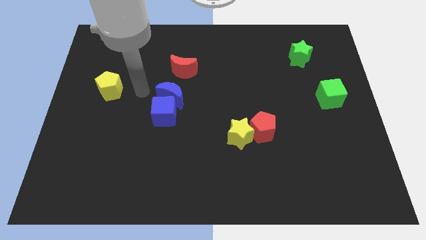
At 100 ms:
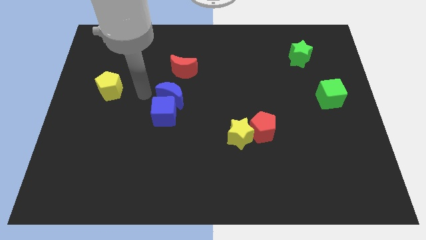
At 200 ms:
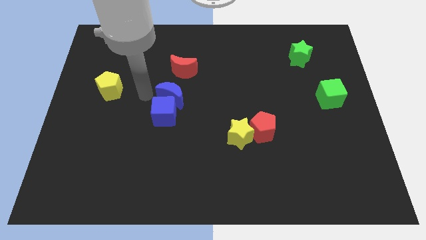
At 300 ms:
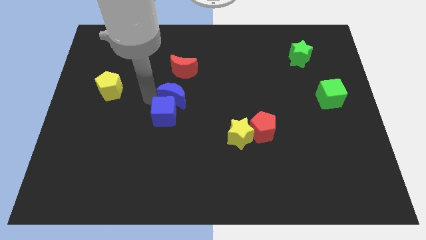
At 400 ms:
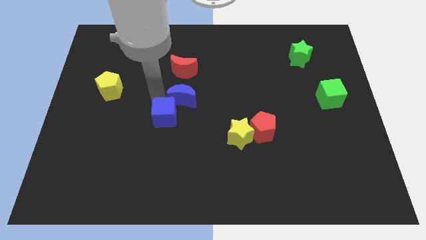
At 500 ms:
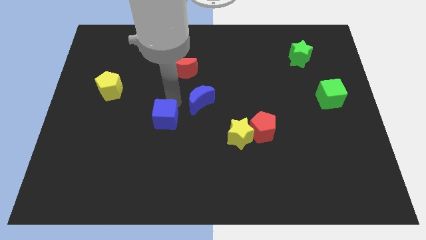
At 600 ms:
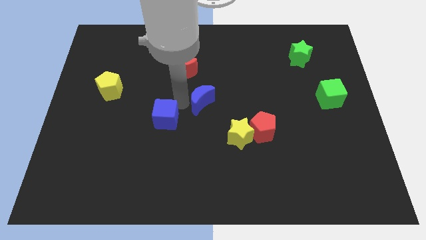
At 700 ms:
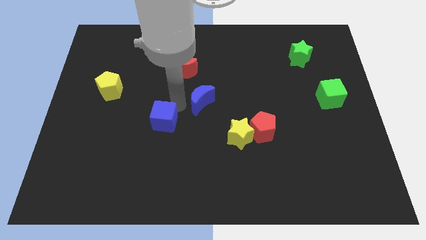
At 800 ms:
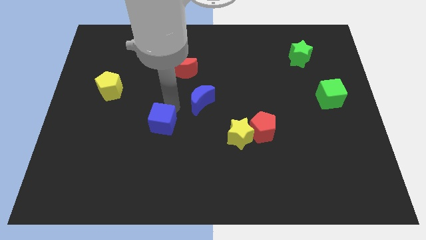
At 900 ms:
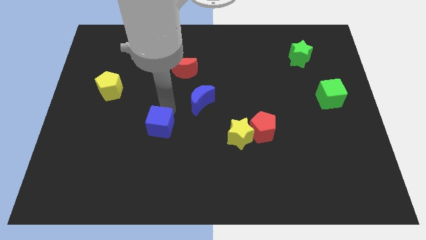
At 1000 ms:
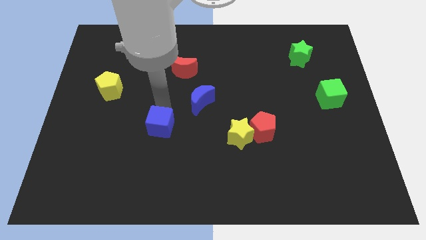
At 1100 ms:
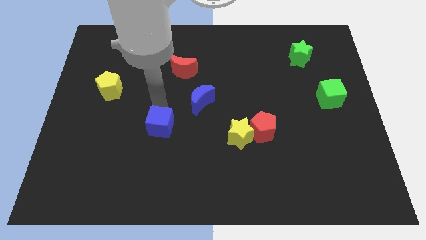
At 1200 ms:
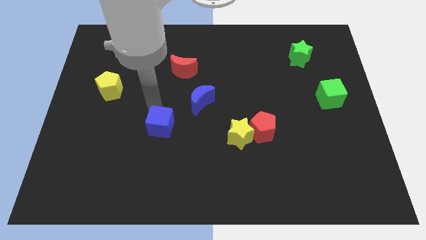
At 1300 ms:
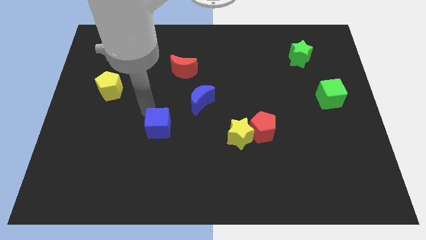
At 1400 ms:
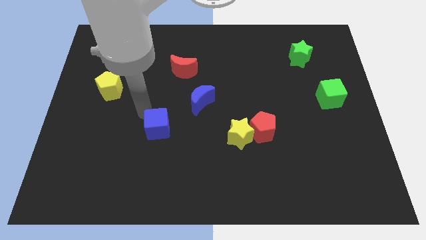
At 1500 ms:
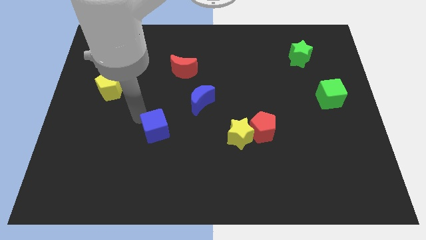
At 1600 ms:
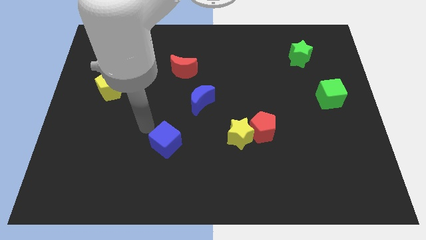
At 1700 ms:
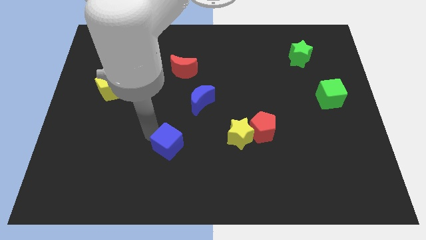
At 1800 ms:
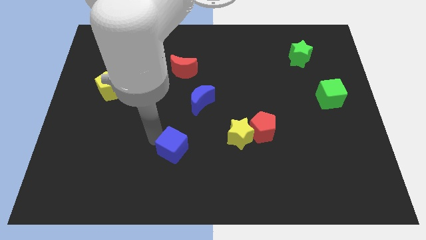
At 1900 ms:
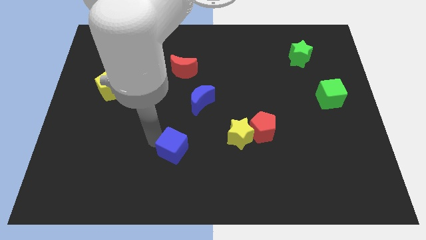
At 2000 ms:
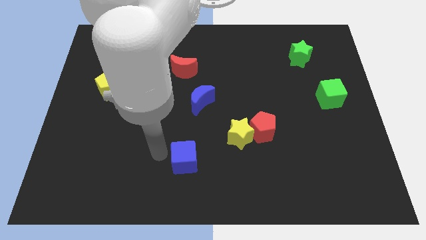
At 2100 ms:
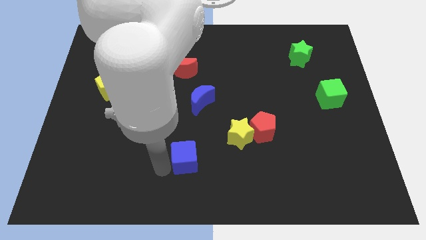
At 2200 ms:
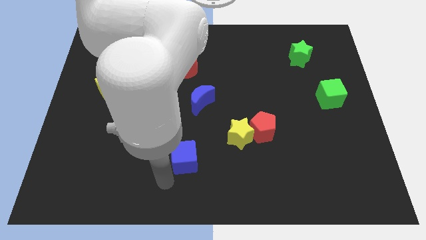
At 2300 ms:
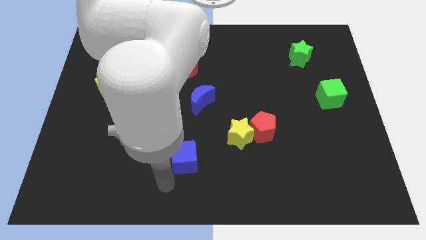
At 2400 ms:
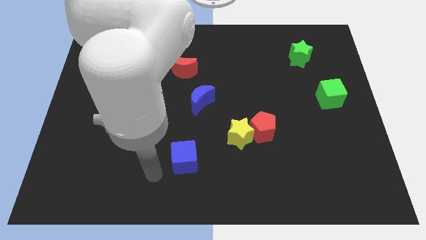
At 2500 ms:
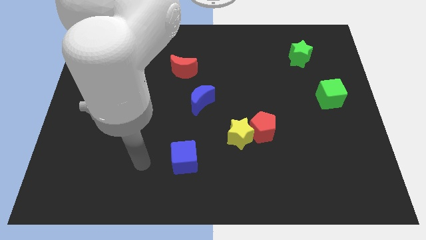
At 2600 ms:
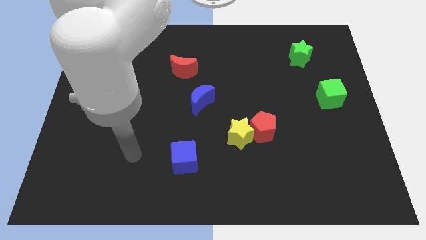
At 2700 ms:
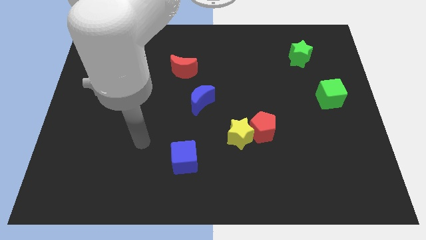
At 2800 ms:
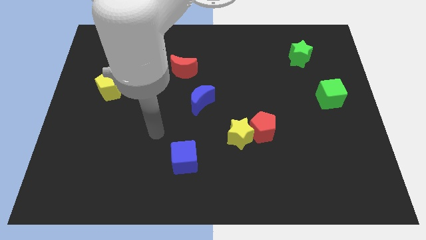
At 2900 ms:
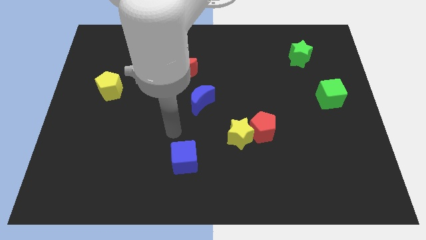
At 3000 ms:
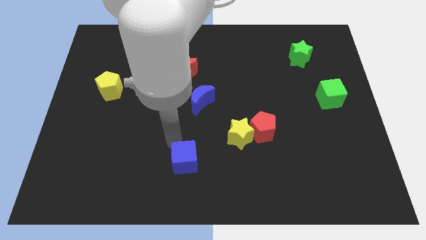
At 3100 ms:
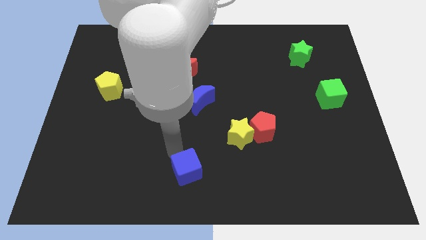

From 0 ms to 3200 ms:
move the blue cube and the blue moon away from each other

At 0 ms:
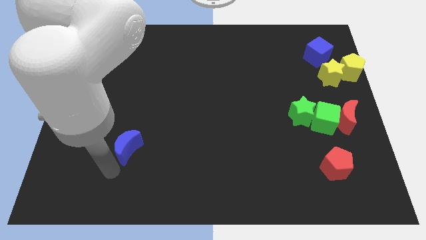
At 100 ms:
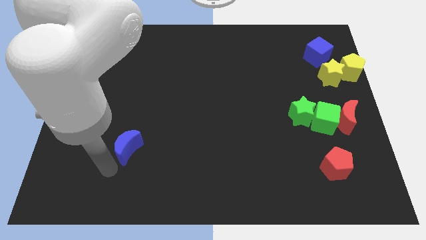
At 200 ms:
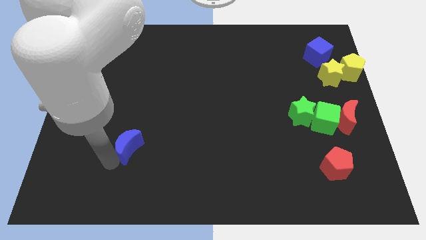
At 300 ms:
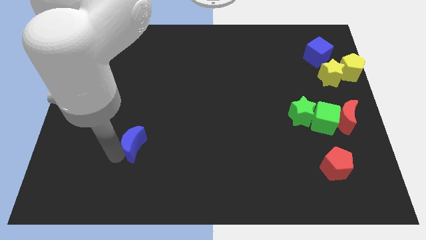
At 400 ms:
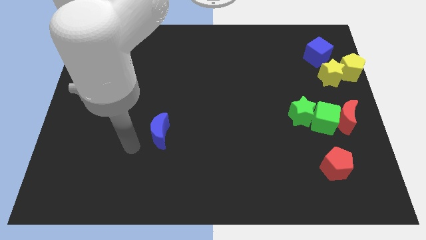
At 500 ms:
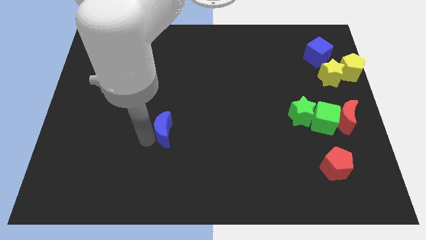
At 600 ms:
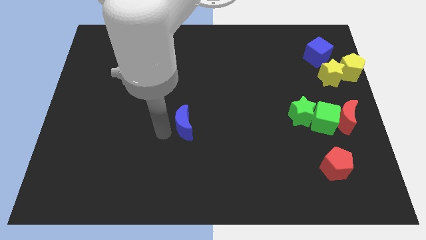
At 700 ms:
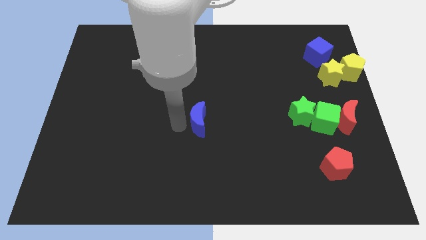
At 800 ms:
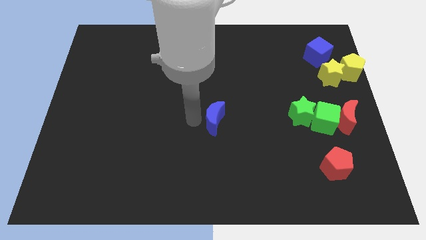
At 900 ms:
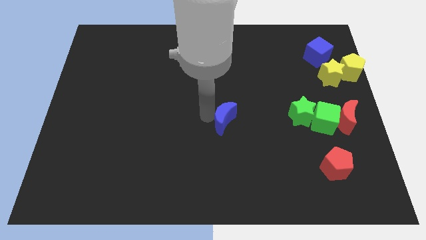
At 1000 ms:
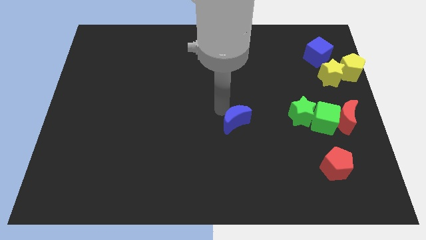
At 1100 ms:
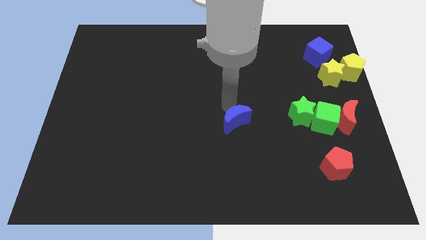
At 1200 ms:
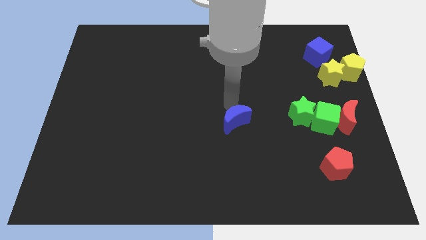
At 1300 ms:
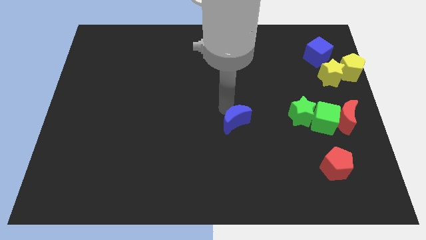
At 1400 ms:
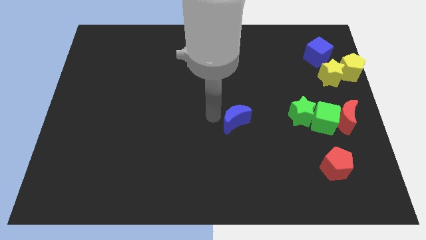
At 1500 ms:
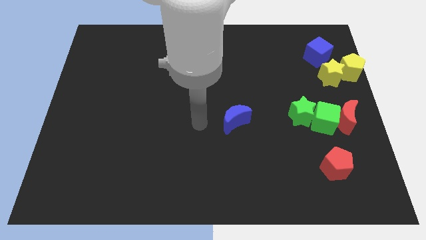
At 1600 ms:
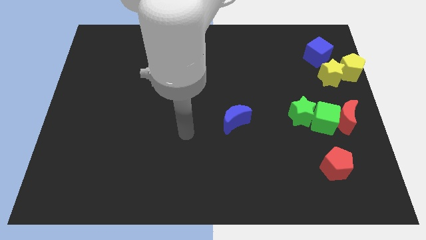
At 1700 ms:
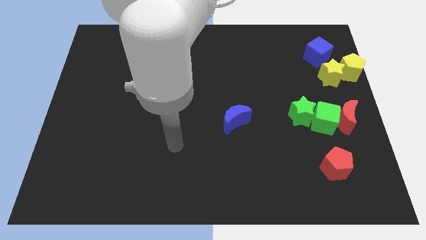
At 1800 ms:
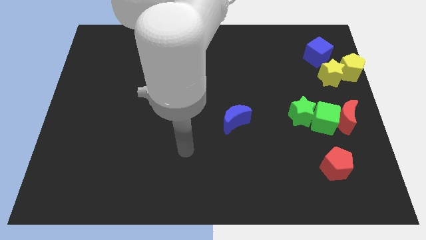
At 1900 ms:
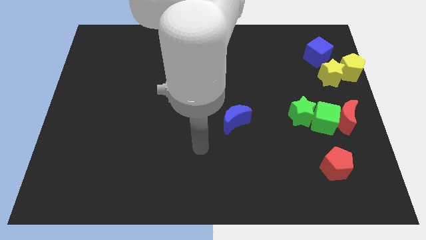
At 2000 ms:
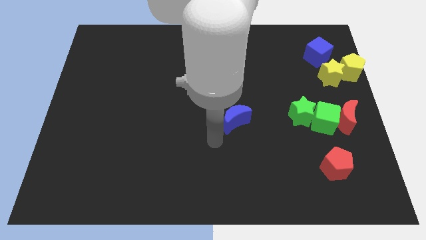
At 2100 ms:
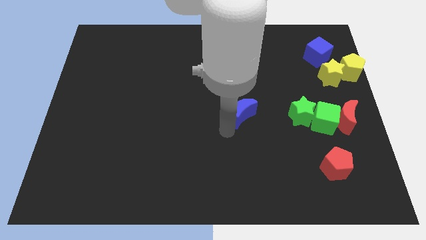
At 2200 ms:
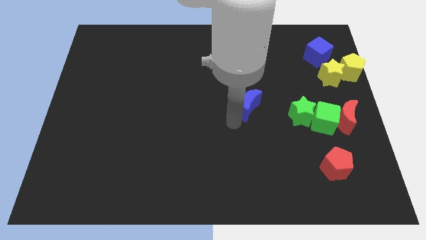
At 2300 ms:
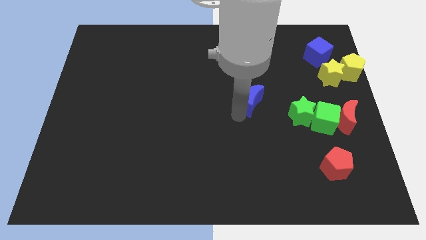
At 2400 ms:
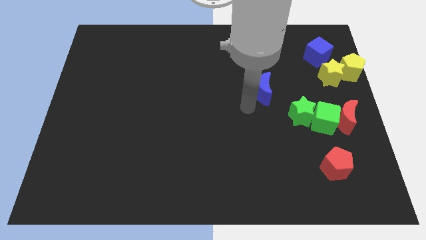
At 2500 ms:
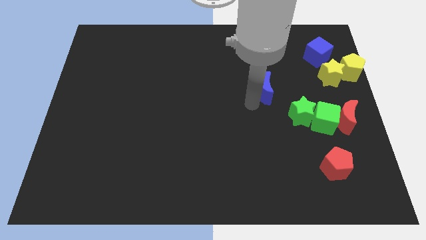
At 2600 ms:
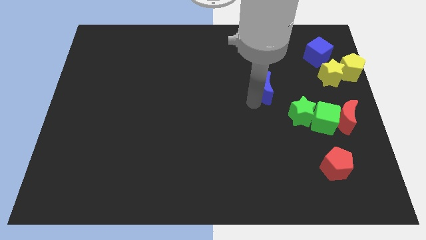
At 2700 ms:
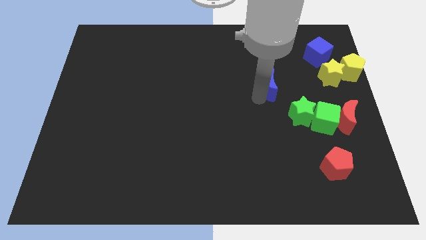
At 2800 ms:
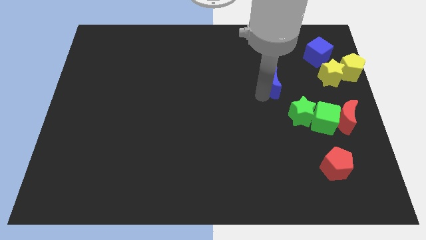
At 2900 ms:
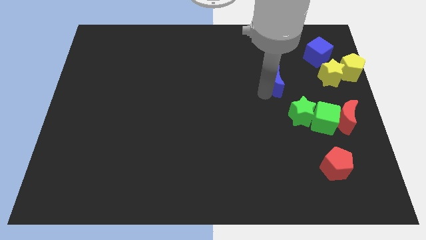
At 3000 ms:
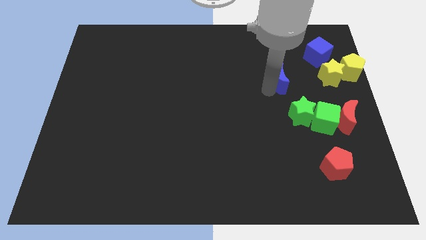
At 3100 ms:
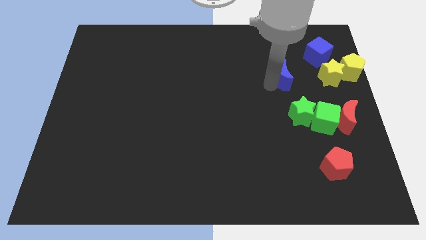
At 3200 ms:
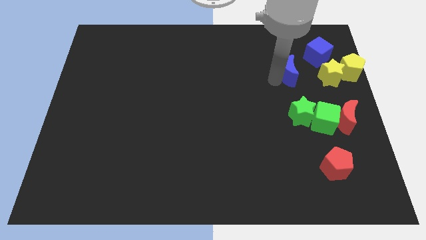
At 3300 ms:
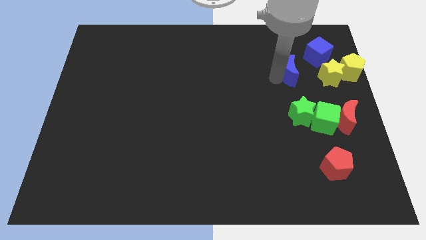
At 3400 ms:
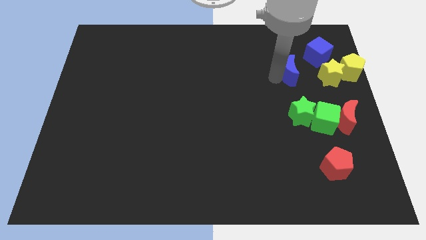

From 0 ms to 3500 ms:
push blue crescent diagonally below blue cube

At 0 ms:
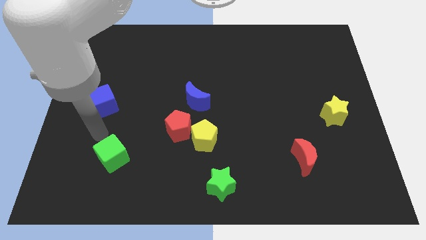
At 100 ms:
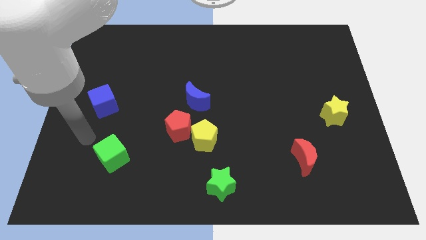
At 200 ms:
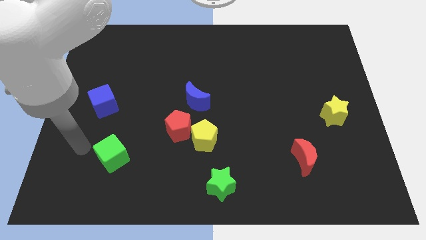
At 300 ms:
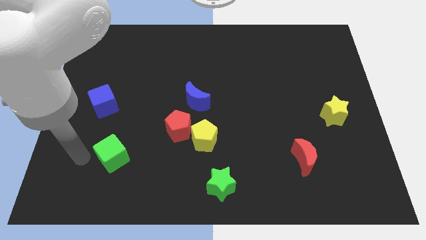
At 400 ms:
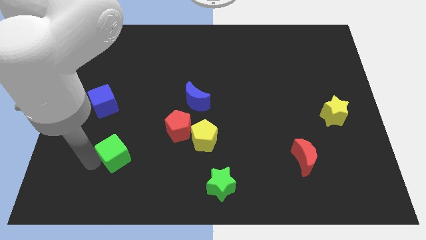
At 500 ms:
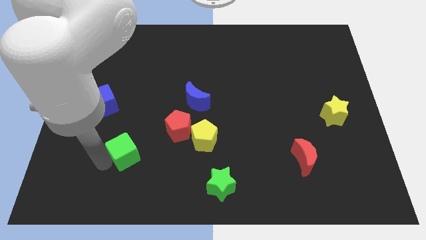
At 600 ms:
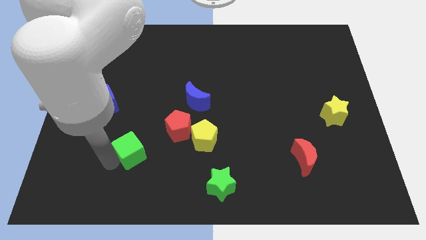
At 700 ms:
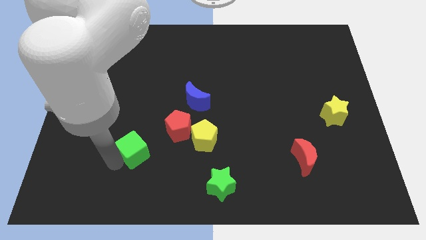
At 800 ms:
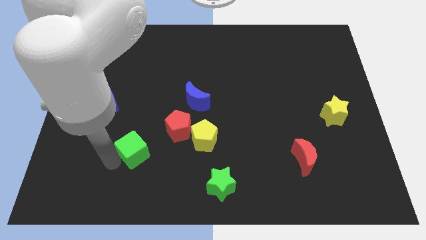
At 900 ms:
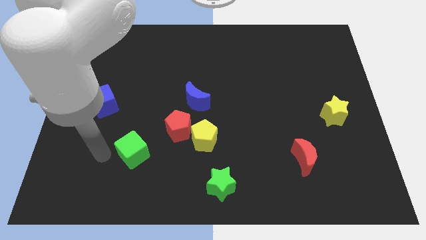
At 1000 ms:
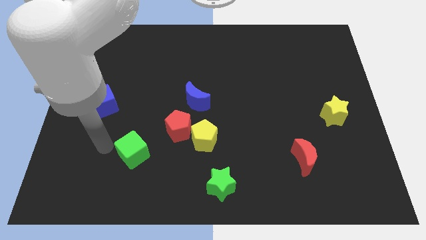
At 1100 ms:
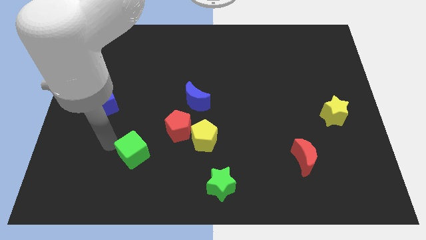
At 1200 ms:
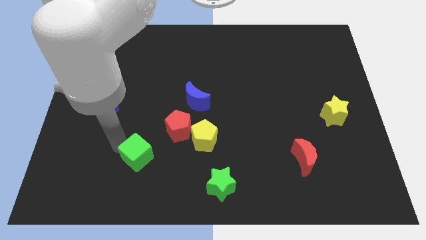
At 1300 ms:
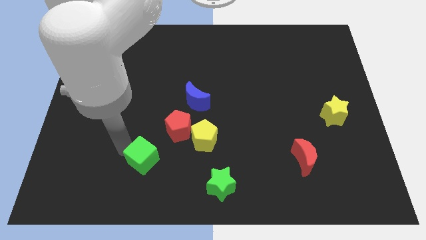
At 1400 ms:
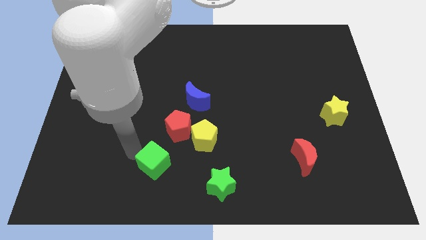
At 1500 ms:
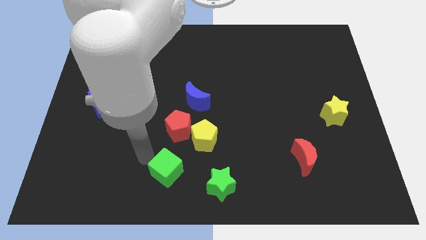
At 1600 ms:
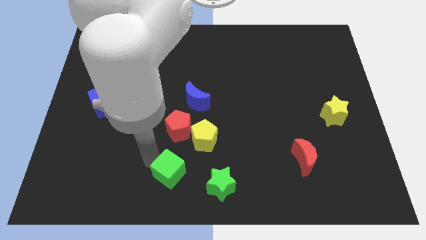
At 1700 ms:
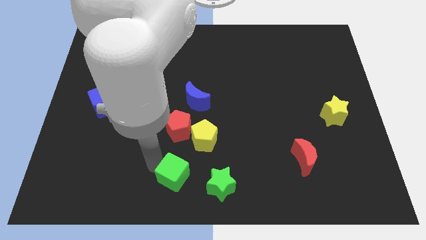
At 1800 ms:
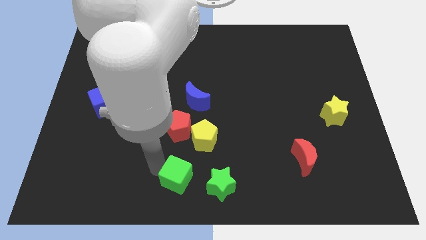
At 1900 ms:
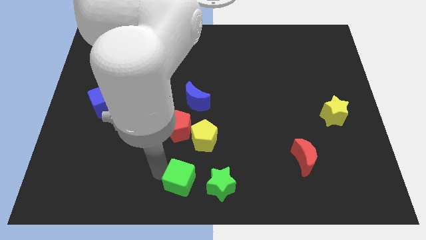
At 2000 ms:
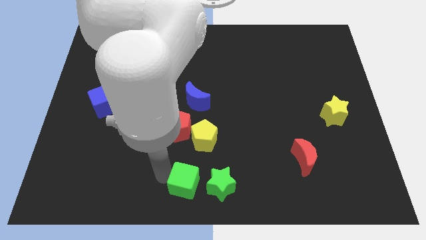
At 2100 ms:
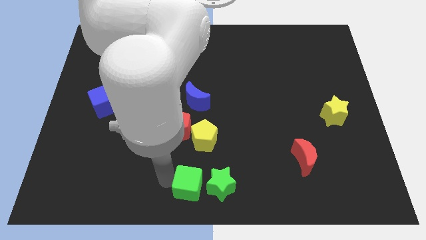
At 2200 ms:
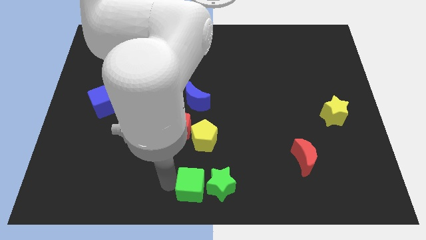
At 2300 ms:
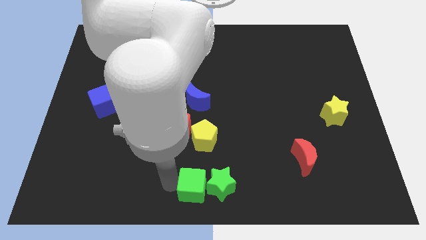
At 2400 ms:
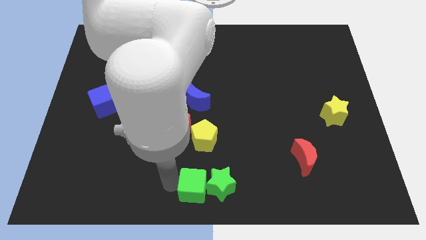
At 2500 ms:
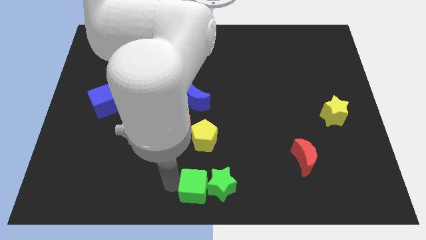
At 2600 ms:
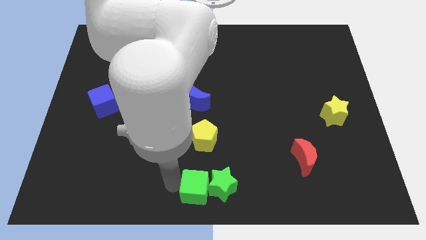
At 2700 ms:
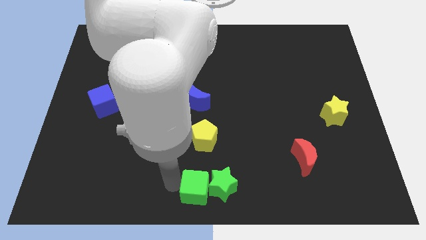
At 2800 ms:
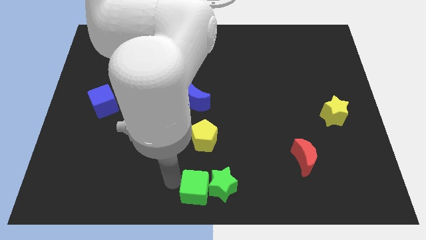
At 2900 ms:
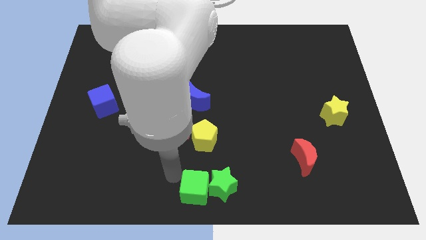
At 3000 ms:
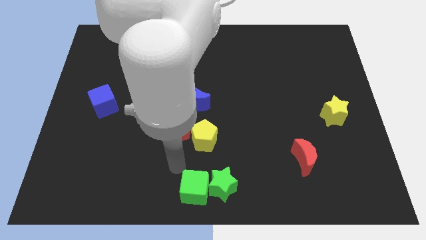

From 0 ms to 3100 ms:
push the green cube left to the green star
